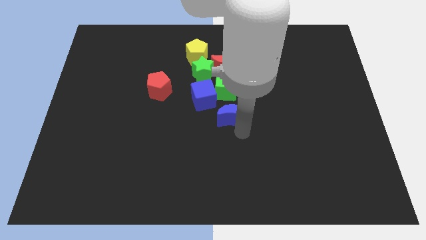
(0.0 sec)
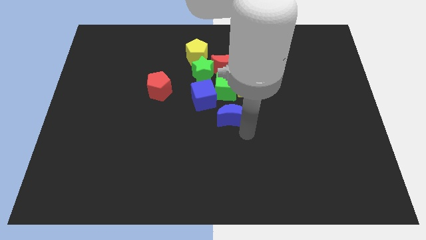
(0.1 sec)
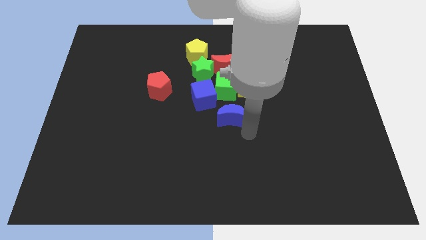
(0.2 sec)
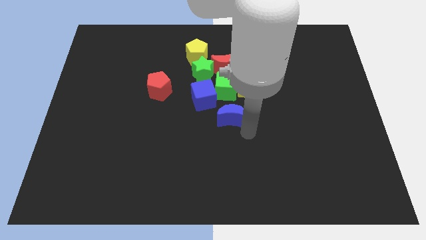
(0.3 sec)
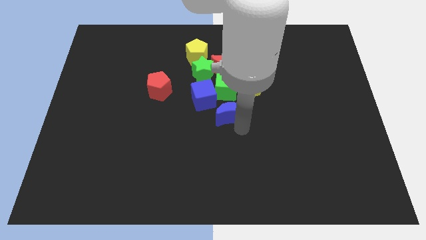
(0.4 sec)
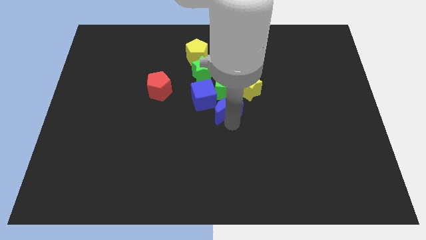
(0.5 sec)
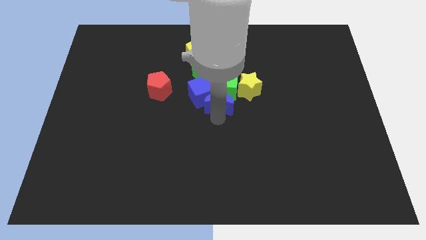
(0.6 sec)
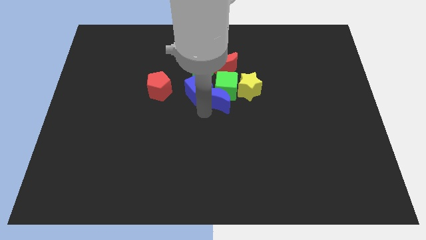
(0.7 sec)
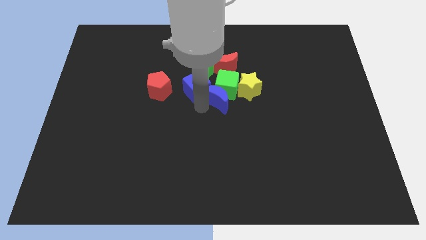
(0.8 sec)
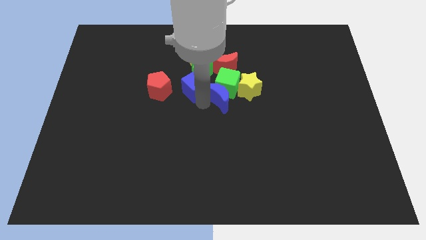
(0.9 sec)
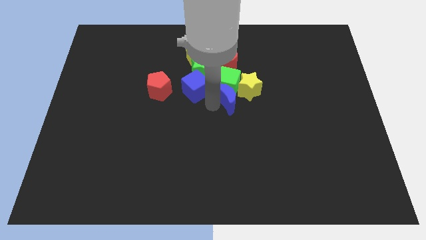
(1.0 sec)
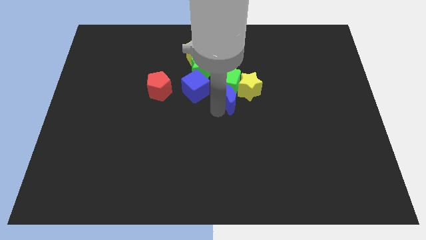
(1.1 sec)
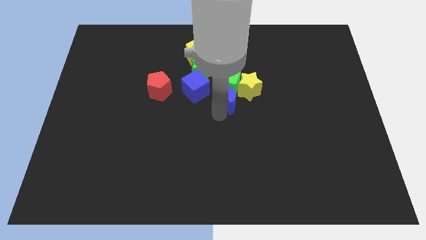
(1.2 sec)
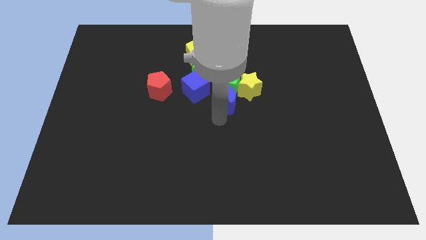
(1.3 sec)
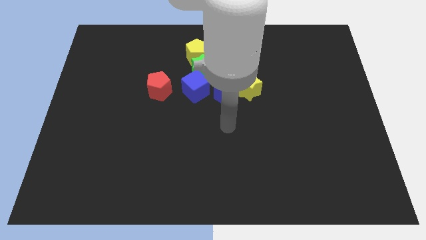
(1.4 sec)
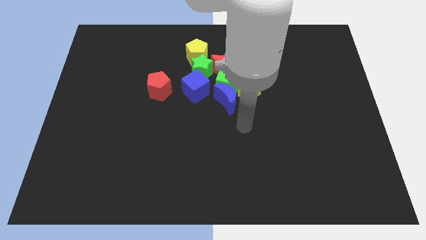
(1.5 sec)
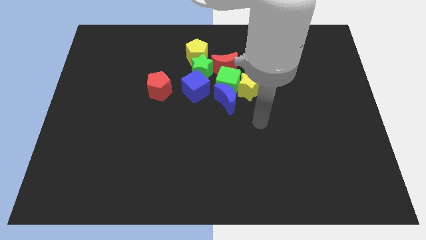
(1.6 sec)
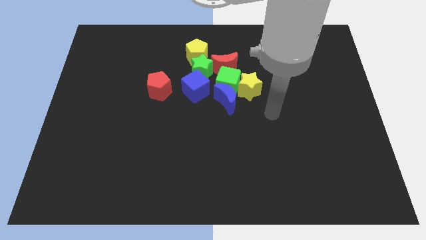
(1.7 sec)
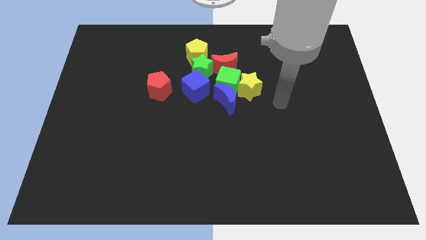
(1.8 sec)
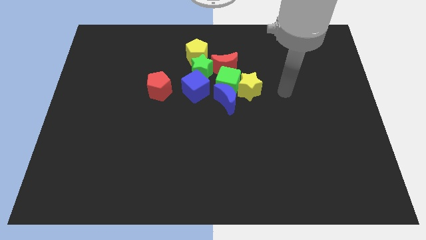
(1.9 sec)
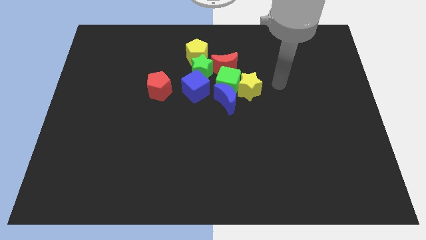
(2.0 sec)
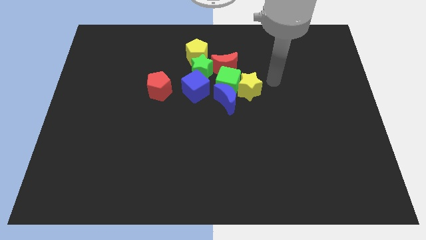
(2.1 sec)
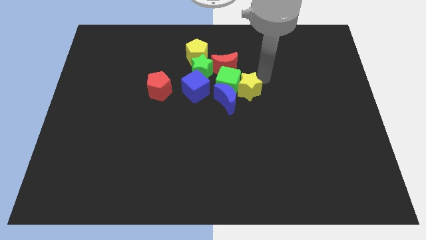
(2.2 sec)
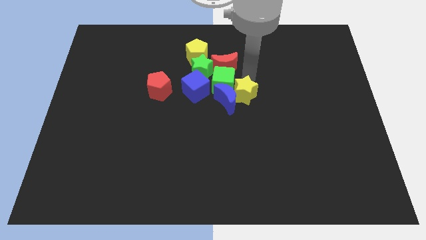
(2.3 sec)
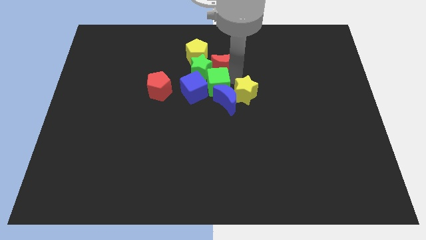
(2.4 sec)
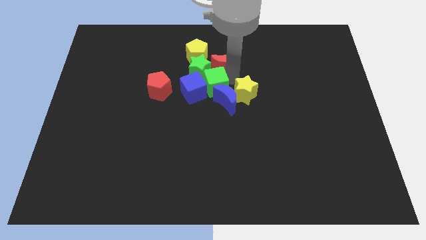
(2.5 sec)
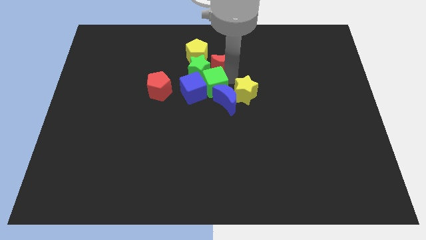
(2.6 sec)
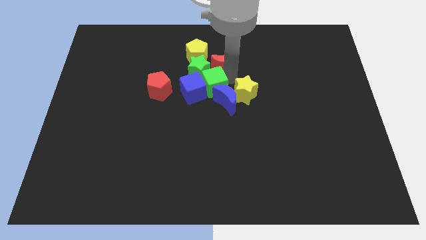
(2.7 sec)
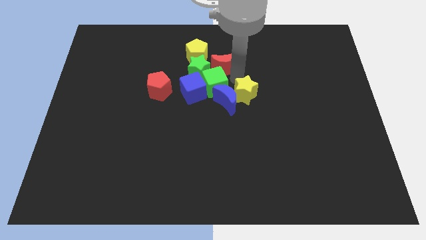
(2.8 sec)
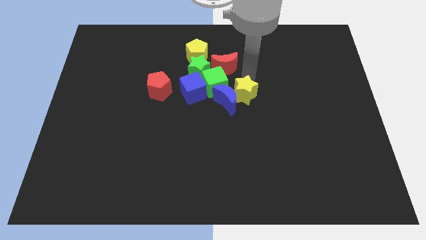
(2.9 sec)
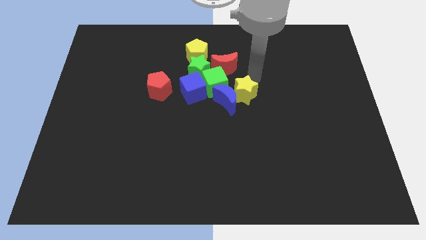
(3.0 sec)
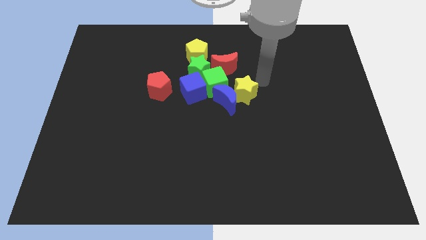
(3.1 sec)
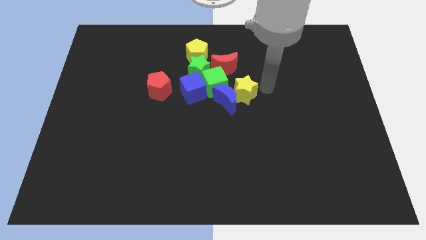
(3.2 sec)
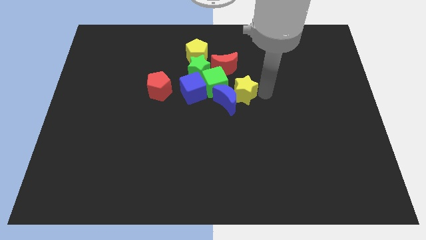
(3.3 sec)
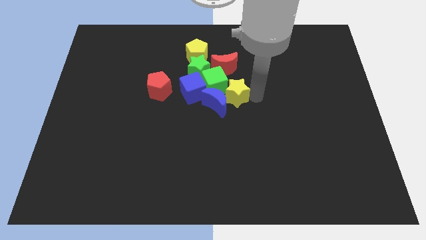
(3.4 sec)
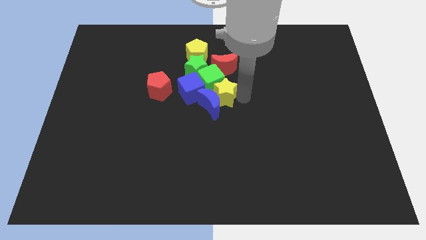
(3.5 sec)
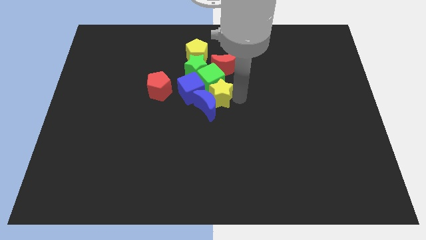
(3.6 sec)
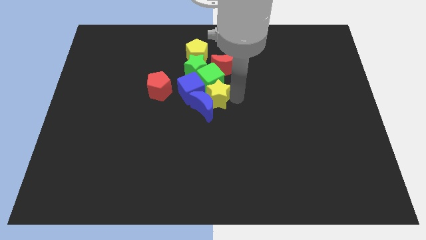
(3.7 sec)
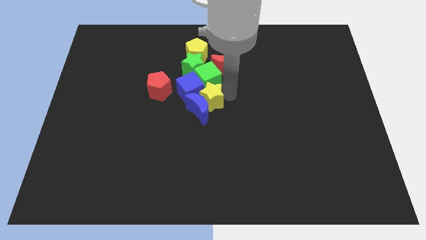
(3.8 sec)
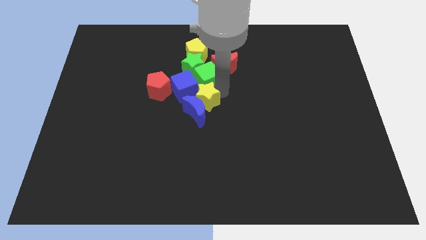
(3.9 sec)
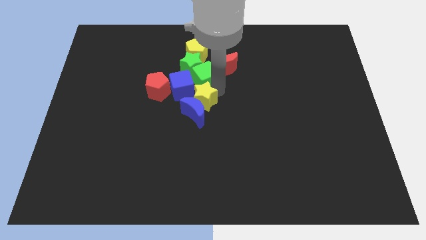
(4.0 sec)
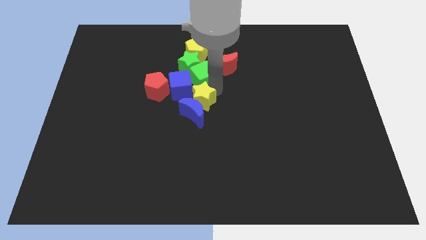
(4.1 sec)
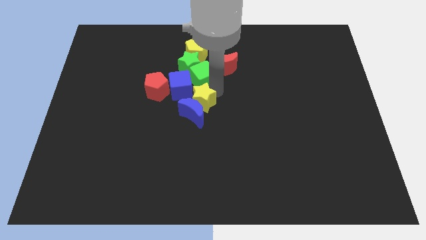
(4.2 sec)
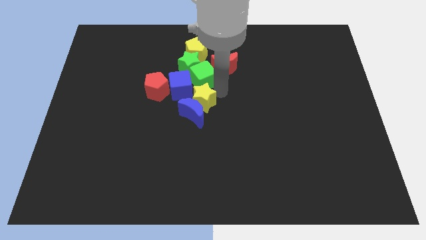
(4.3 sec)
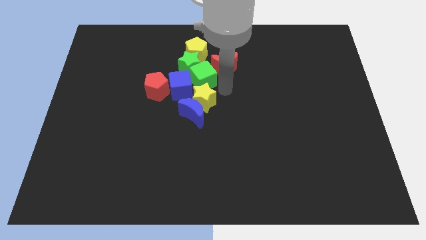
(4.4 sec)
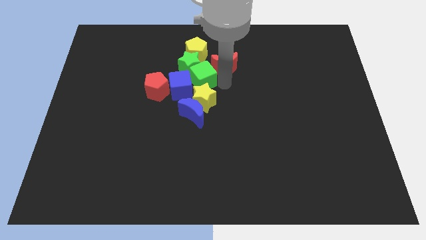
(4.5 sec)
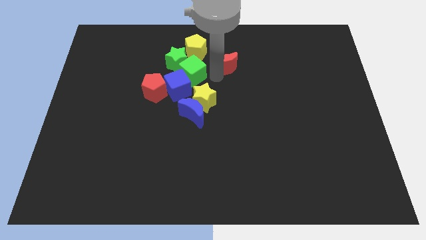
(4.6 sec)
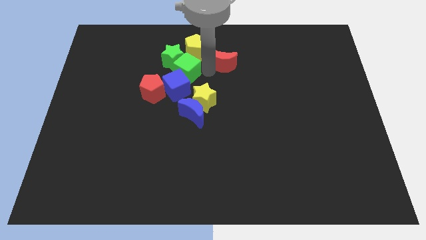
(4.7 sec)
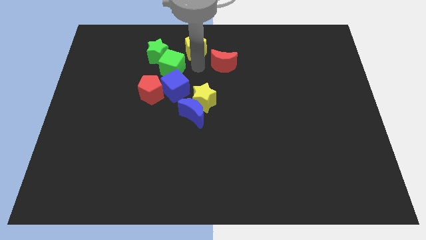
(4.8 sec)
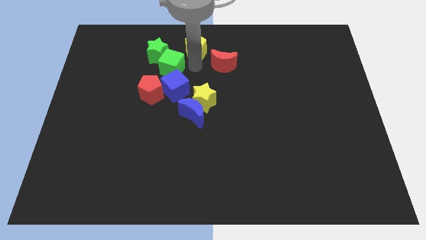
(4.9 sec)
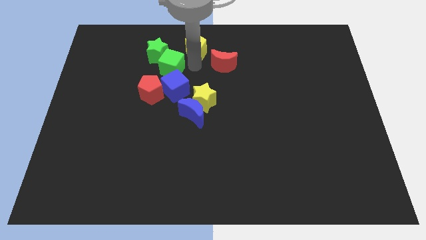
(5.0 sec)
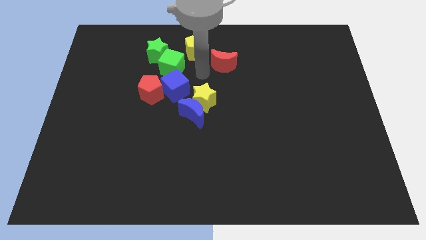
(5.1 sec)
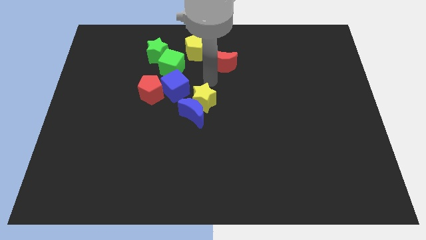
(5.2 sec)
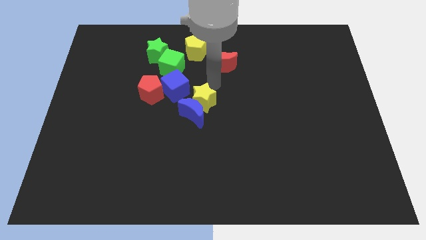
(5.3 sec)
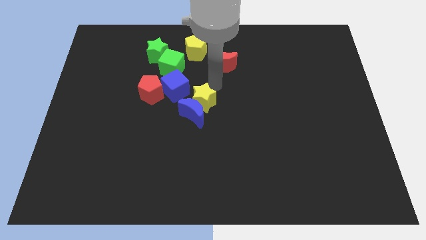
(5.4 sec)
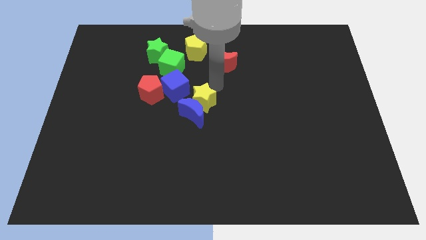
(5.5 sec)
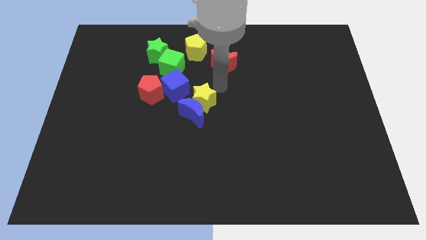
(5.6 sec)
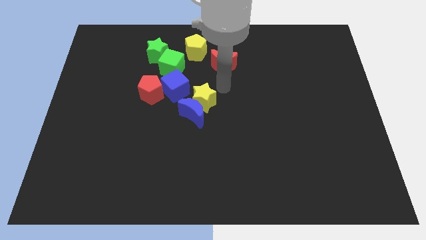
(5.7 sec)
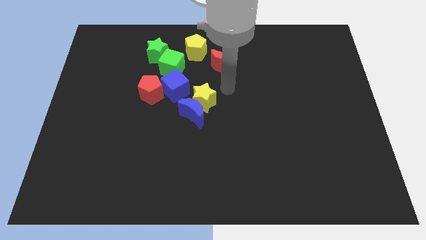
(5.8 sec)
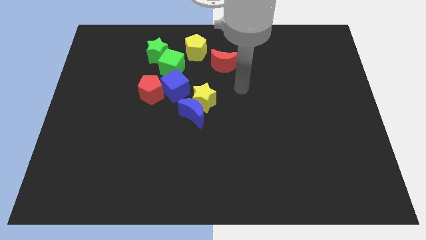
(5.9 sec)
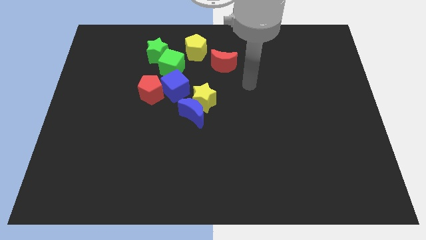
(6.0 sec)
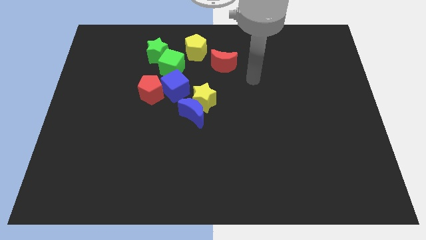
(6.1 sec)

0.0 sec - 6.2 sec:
push the yellow pentagon to the top center of the board

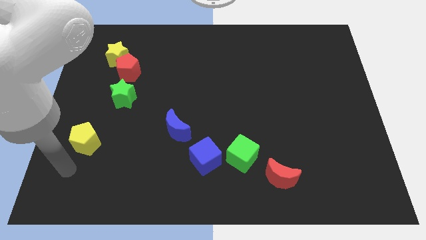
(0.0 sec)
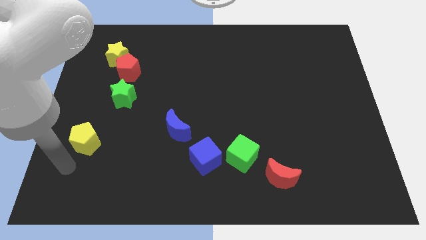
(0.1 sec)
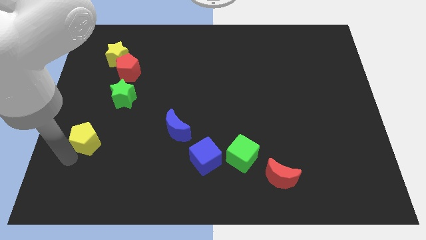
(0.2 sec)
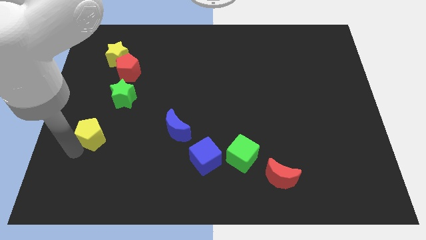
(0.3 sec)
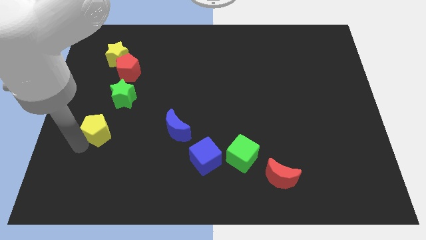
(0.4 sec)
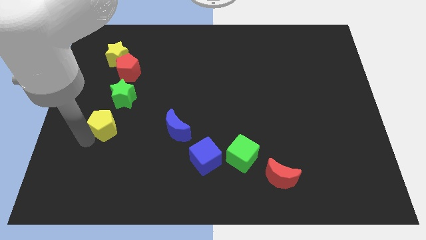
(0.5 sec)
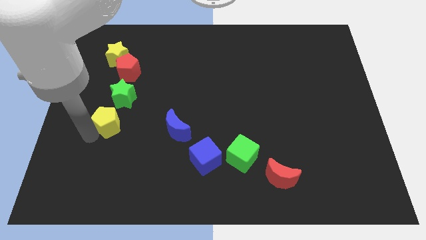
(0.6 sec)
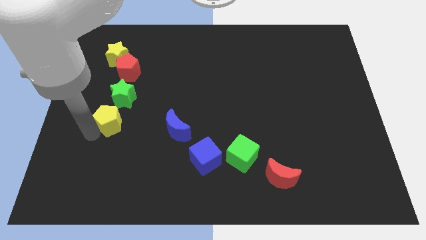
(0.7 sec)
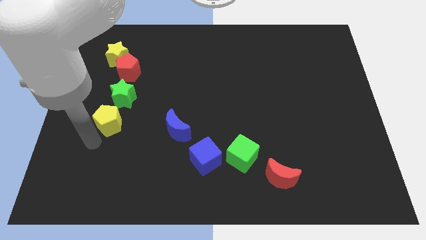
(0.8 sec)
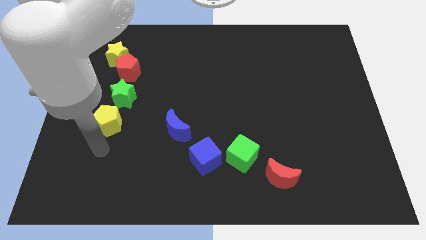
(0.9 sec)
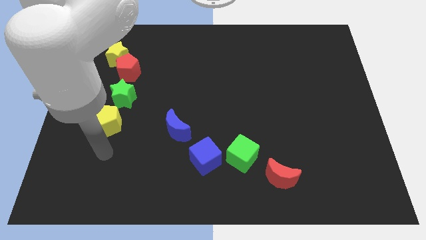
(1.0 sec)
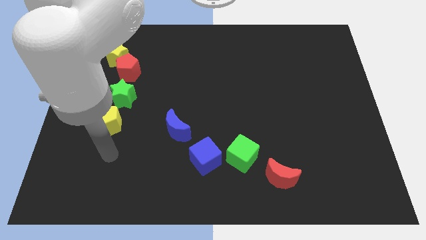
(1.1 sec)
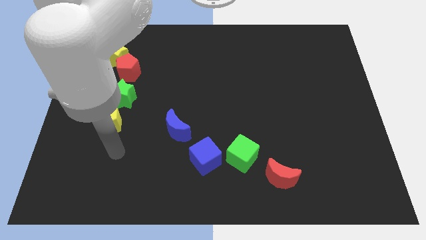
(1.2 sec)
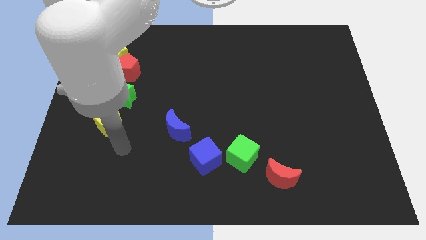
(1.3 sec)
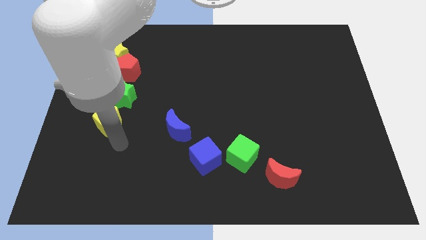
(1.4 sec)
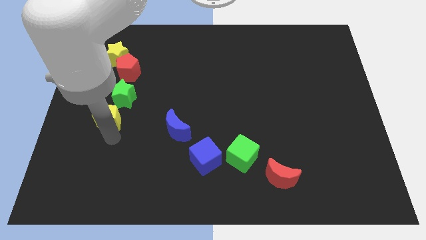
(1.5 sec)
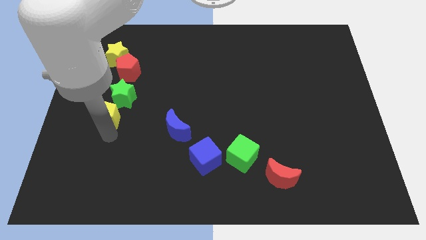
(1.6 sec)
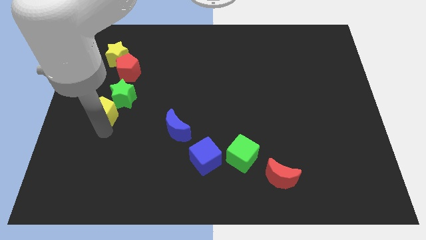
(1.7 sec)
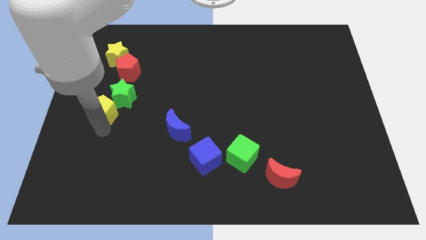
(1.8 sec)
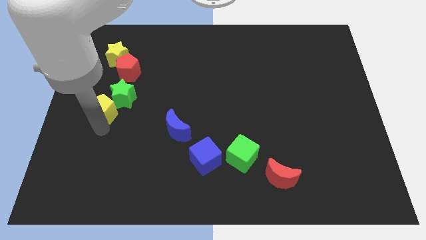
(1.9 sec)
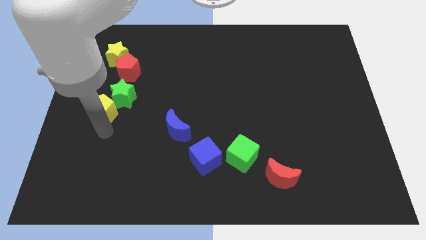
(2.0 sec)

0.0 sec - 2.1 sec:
move the yellow pentagon to the bottom side of the green star

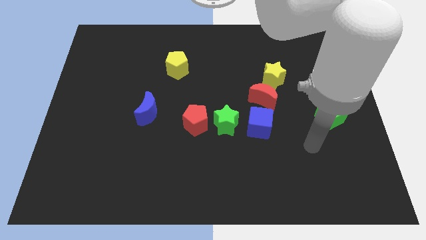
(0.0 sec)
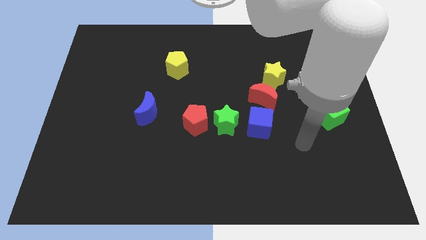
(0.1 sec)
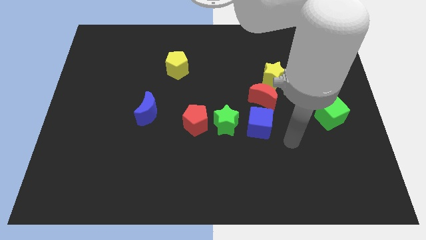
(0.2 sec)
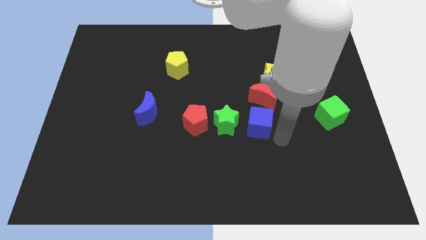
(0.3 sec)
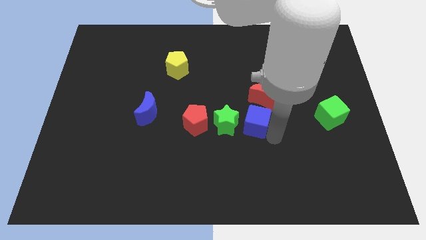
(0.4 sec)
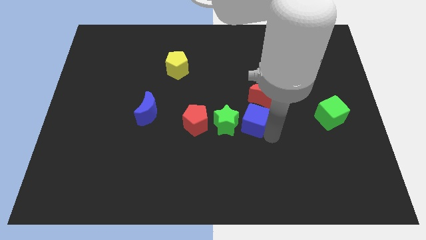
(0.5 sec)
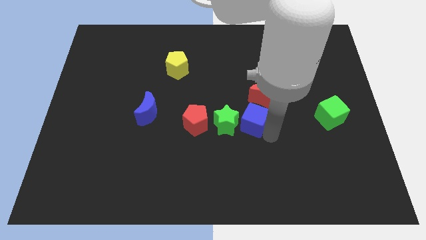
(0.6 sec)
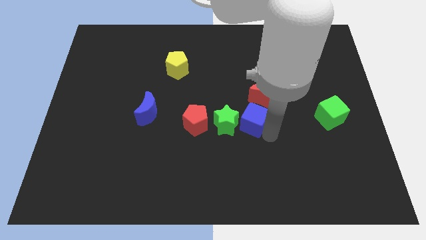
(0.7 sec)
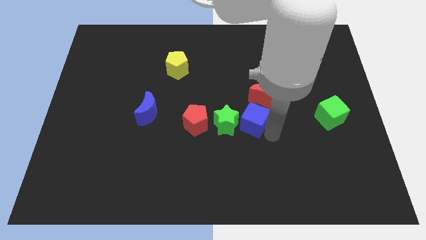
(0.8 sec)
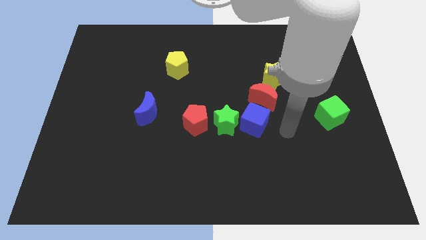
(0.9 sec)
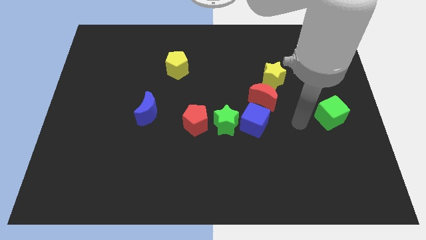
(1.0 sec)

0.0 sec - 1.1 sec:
move the blue cube close to the right side of the green star
